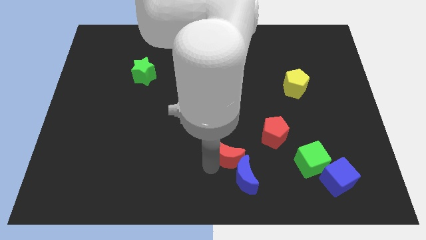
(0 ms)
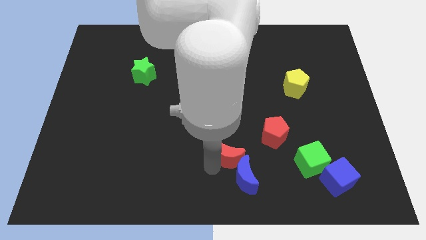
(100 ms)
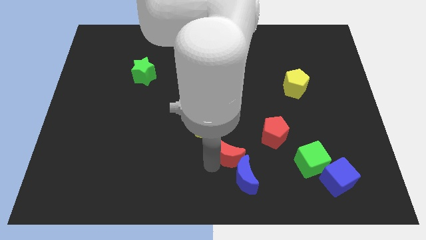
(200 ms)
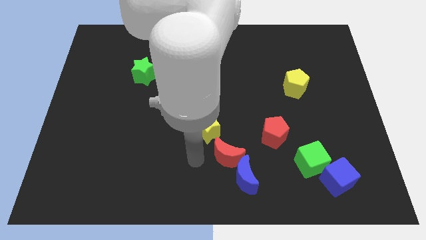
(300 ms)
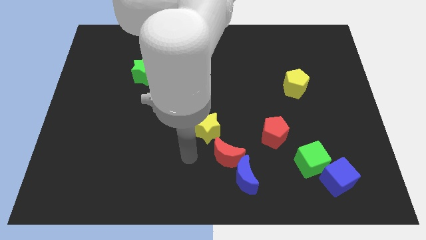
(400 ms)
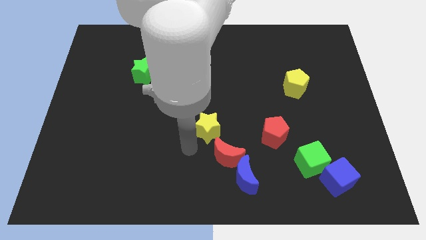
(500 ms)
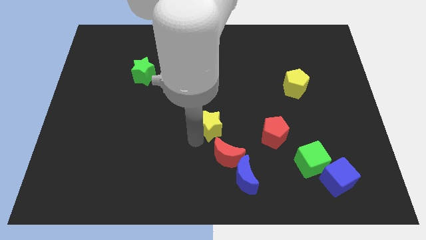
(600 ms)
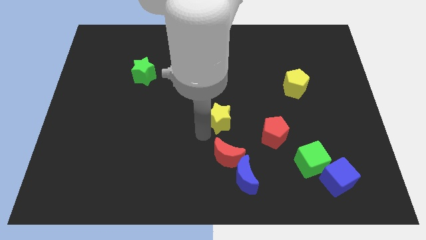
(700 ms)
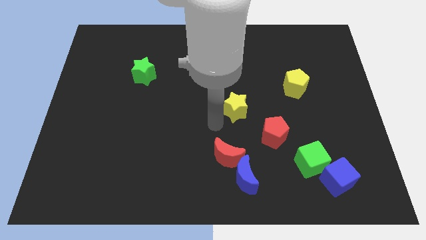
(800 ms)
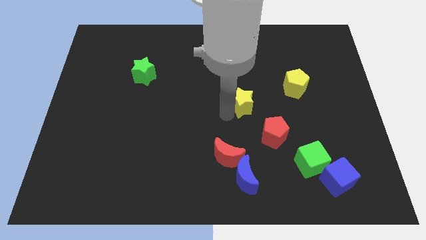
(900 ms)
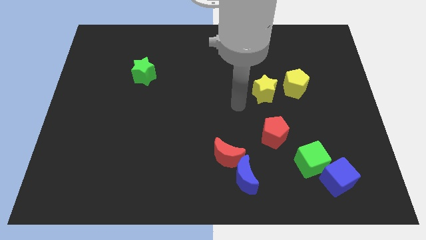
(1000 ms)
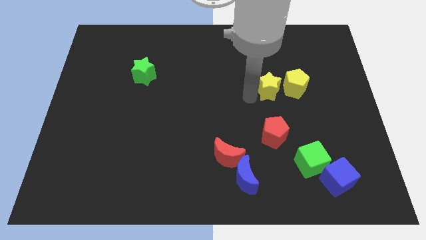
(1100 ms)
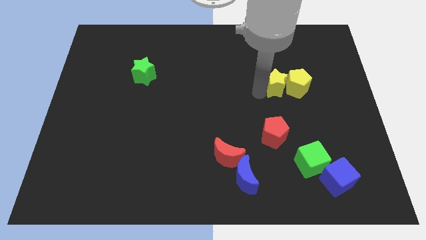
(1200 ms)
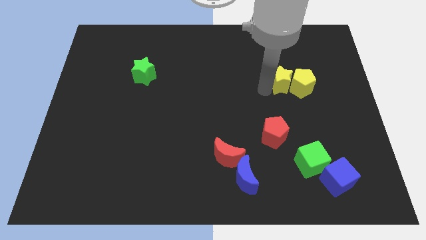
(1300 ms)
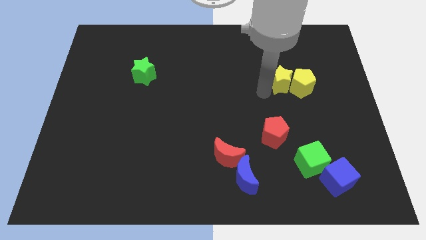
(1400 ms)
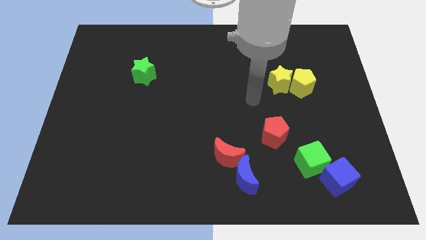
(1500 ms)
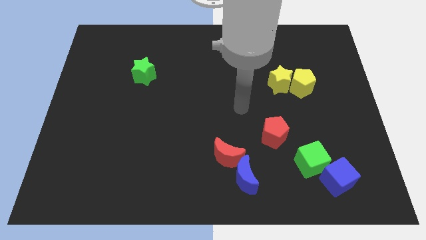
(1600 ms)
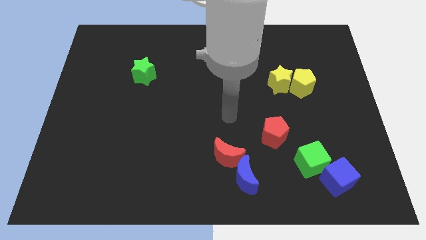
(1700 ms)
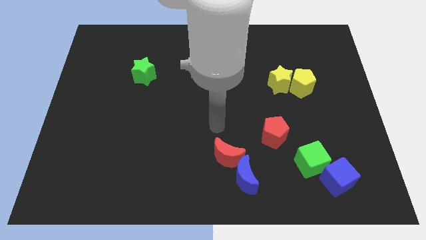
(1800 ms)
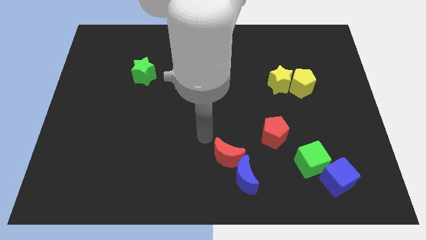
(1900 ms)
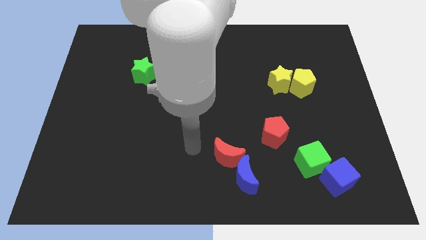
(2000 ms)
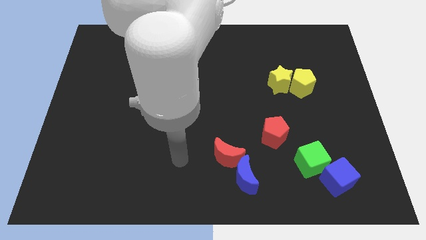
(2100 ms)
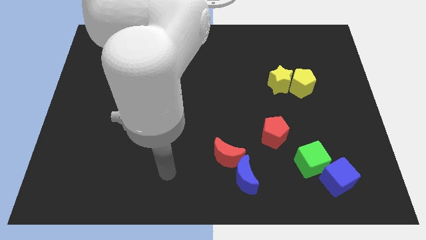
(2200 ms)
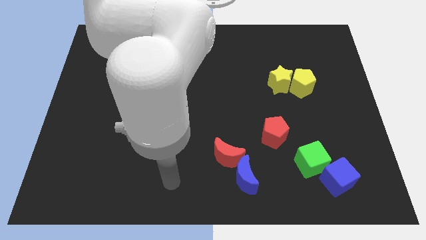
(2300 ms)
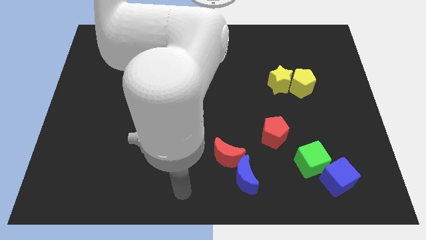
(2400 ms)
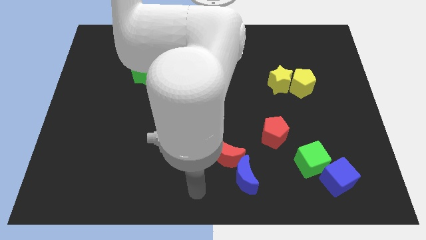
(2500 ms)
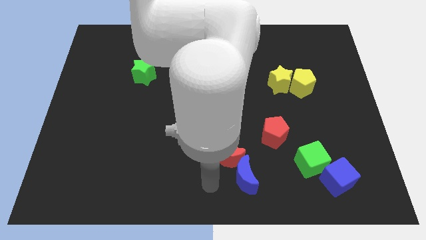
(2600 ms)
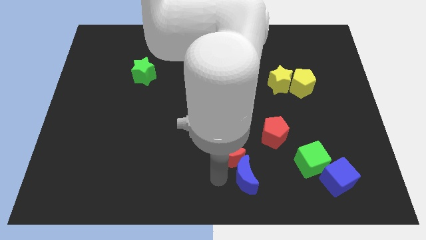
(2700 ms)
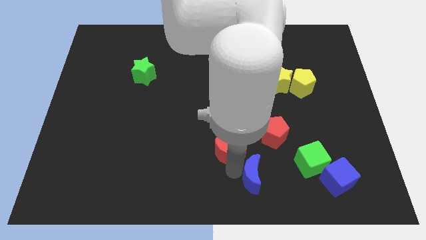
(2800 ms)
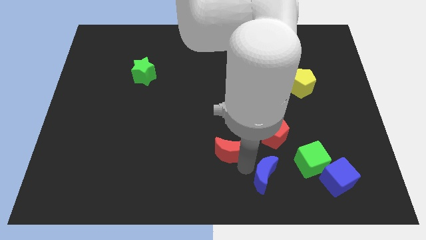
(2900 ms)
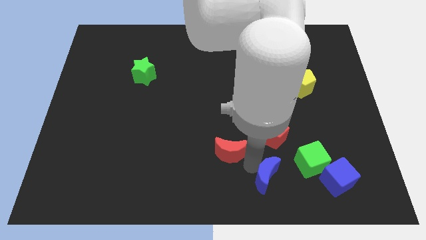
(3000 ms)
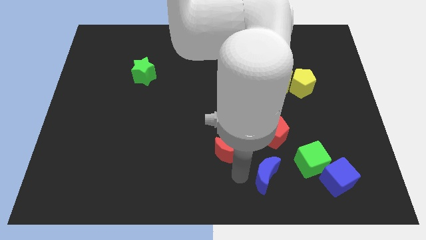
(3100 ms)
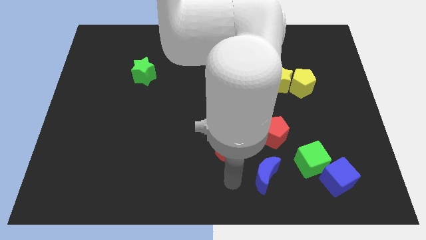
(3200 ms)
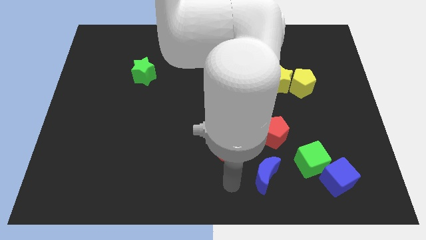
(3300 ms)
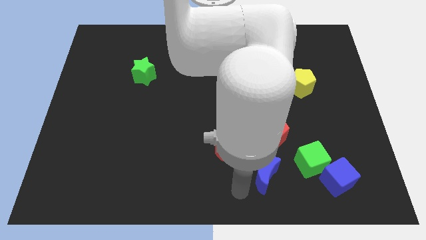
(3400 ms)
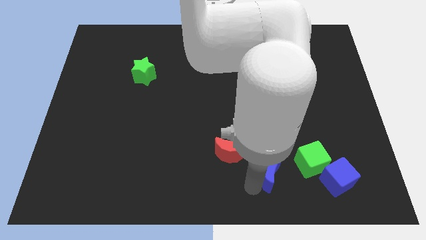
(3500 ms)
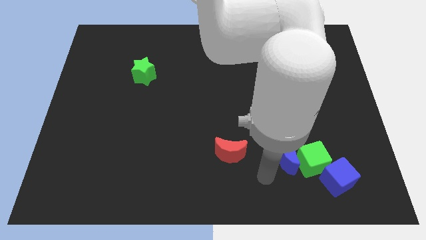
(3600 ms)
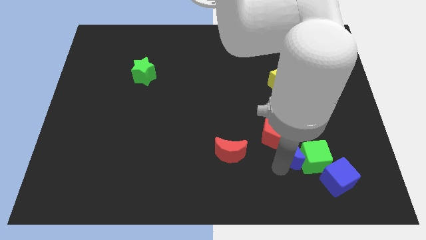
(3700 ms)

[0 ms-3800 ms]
slide the blue moon into the green cube

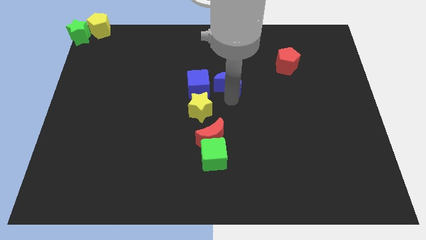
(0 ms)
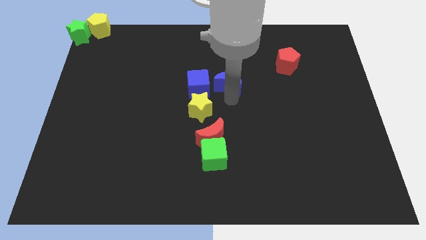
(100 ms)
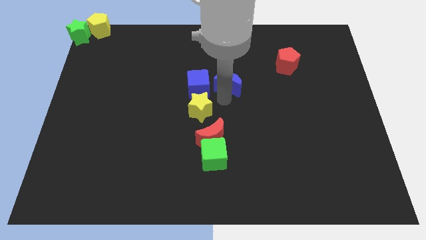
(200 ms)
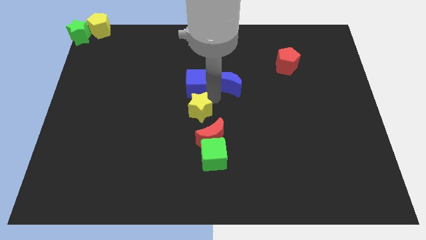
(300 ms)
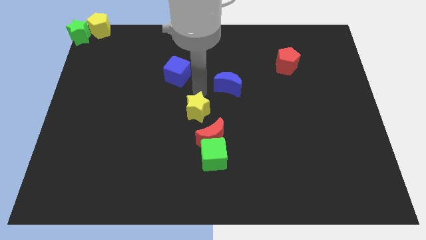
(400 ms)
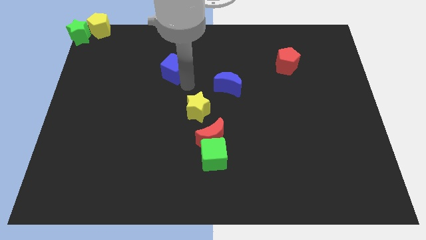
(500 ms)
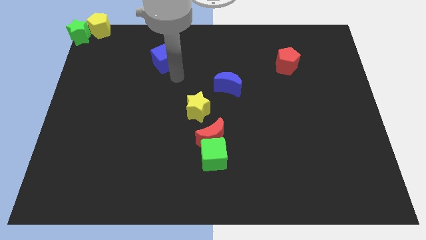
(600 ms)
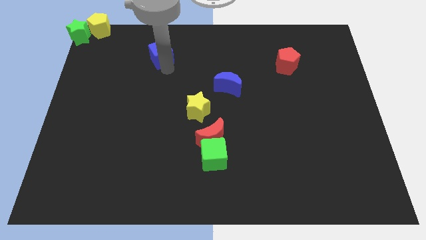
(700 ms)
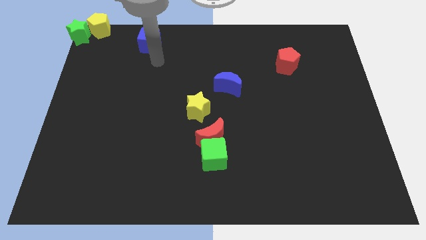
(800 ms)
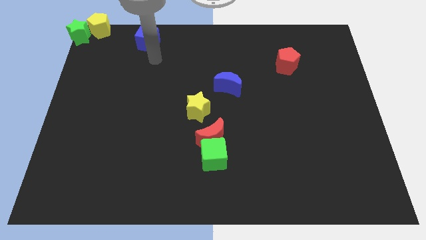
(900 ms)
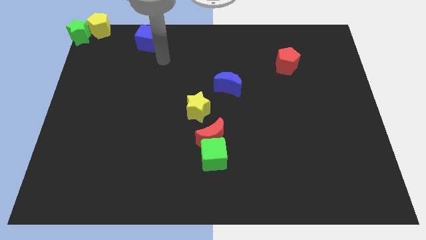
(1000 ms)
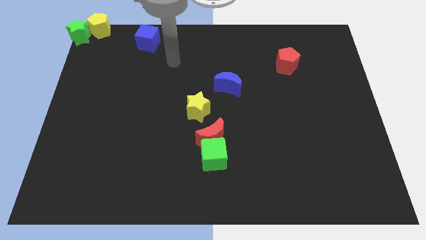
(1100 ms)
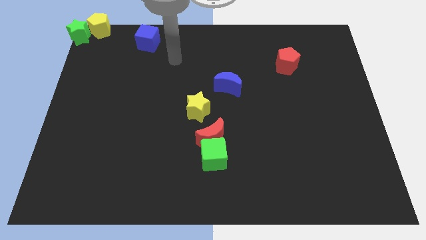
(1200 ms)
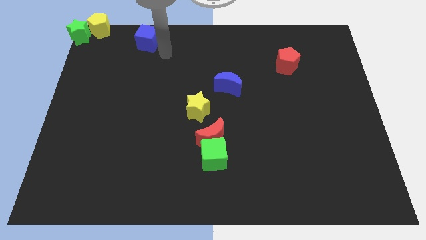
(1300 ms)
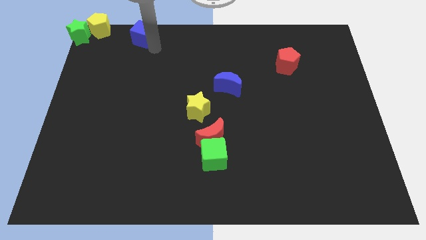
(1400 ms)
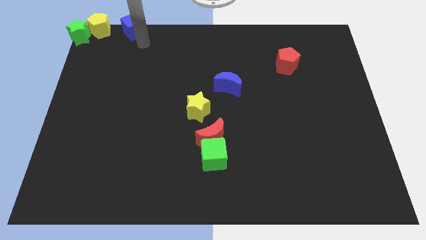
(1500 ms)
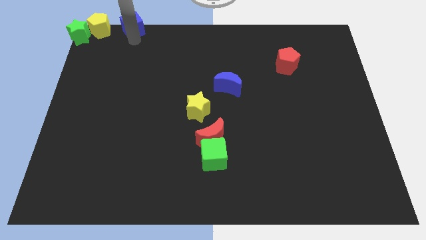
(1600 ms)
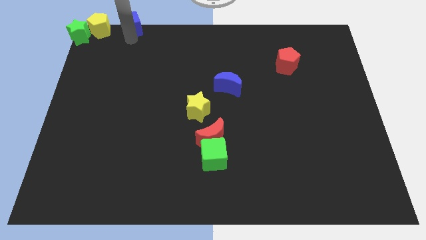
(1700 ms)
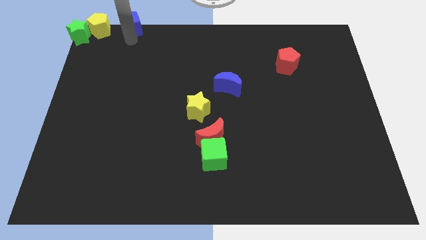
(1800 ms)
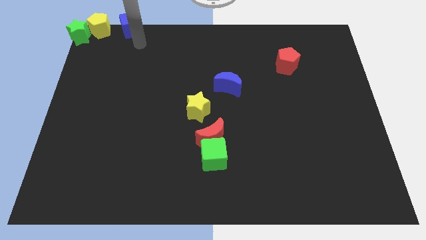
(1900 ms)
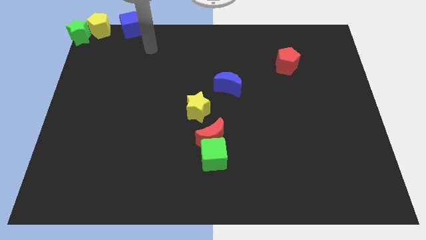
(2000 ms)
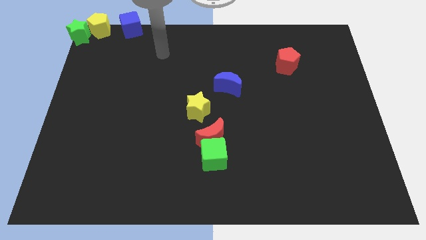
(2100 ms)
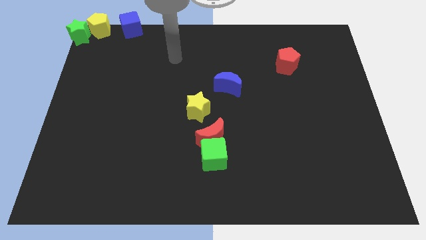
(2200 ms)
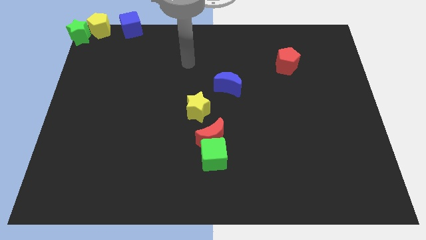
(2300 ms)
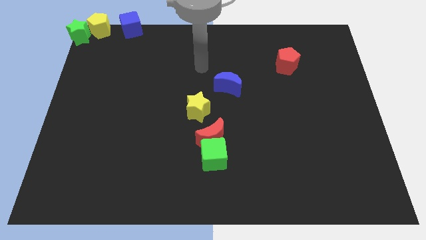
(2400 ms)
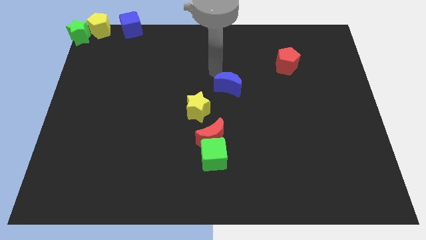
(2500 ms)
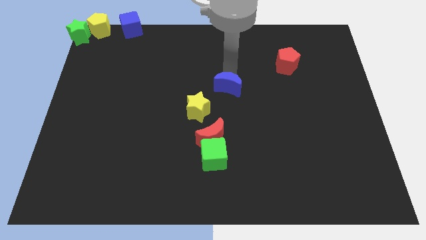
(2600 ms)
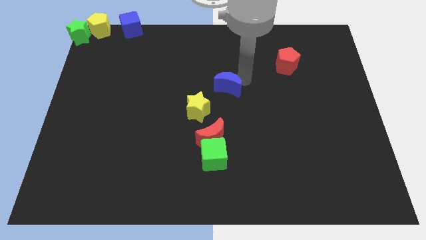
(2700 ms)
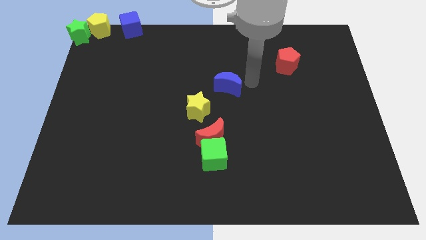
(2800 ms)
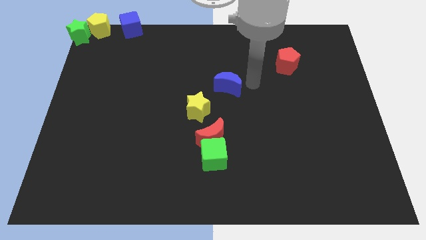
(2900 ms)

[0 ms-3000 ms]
move the blue cube right to the yellow pentagon

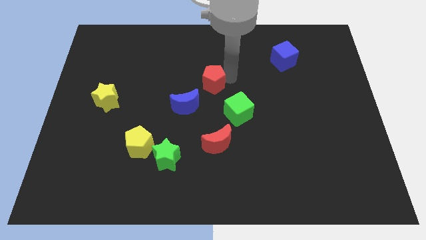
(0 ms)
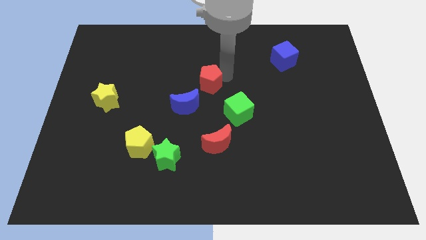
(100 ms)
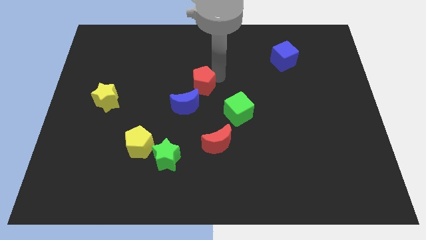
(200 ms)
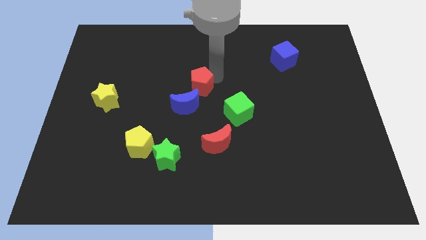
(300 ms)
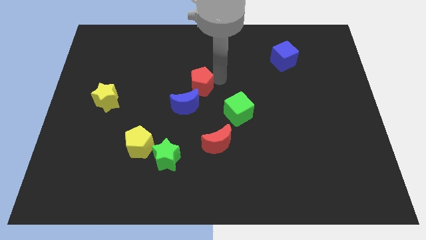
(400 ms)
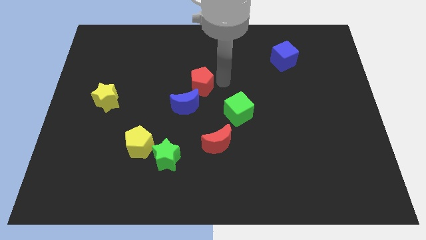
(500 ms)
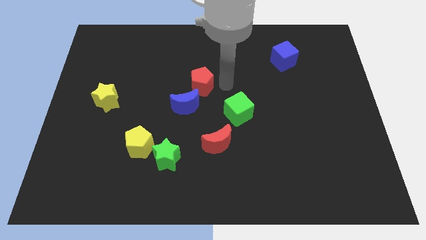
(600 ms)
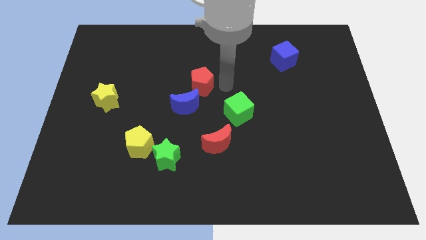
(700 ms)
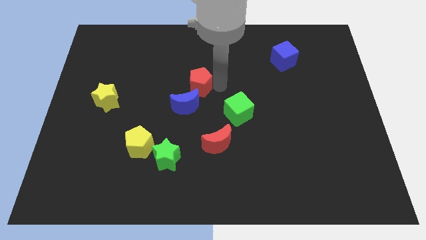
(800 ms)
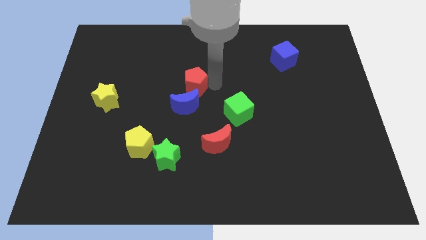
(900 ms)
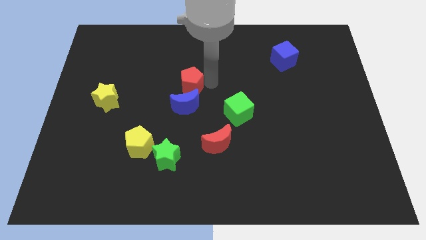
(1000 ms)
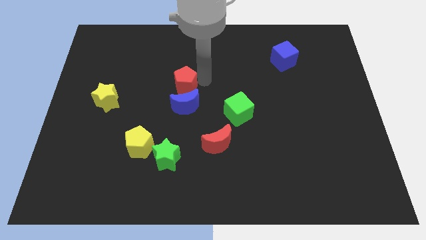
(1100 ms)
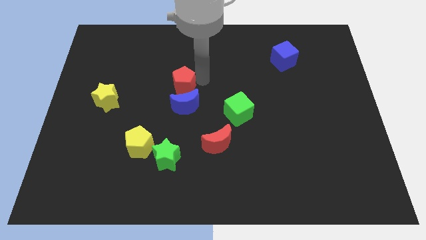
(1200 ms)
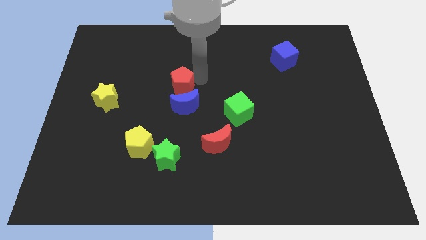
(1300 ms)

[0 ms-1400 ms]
put the red pentagon vertically above the blue moon

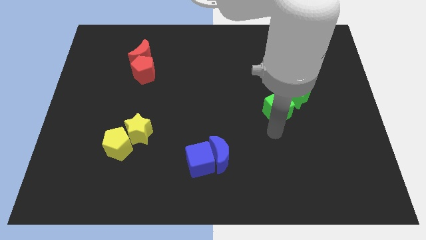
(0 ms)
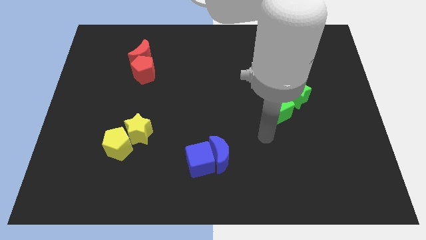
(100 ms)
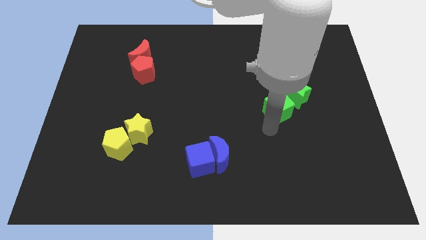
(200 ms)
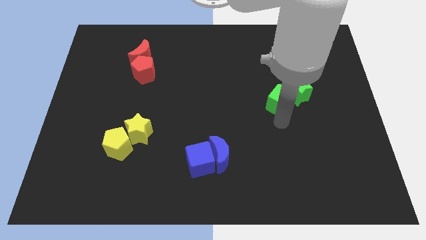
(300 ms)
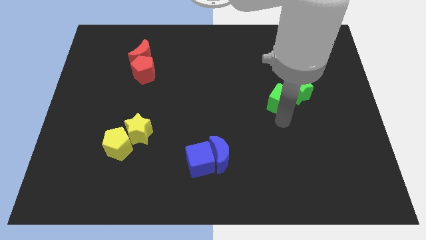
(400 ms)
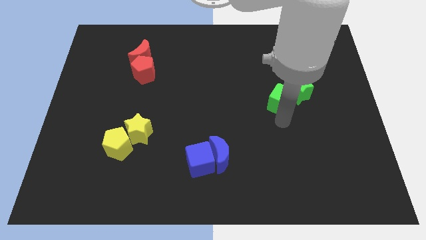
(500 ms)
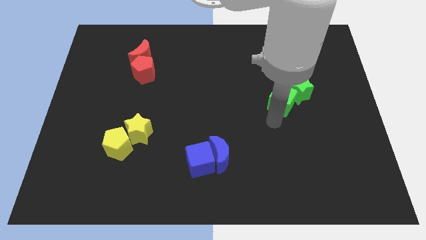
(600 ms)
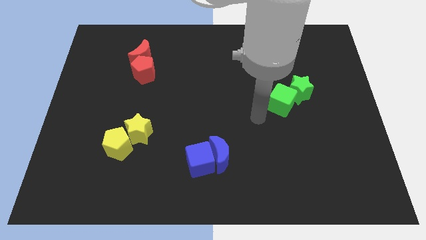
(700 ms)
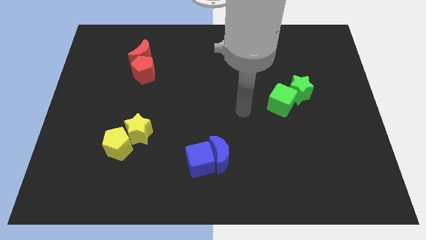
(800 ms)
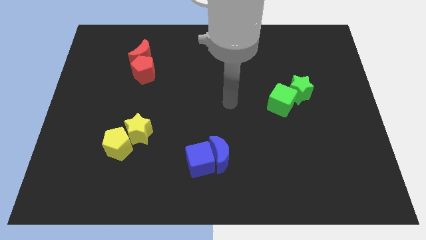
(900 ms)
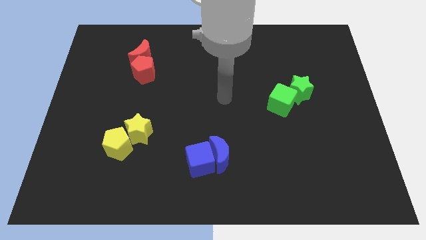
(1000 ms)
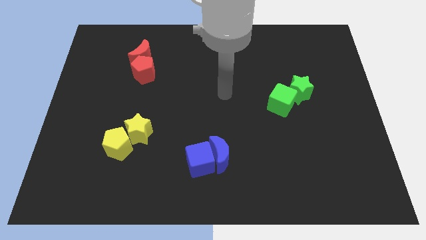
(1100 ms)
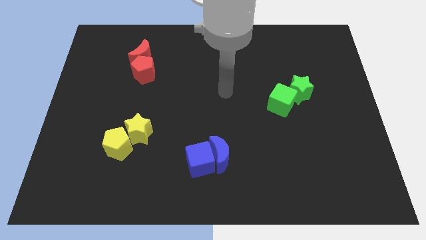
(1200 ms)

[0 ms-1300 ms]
move the green star with the green cube
